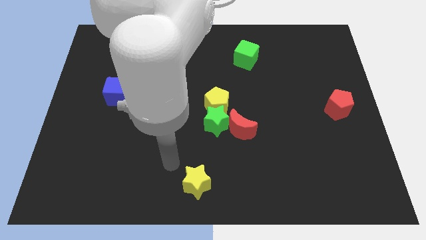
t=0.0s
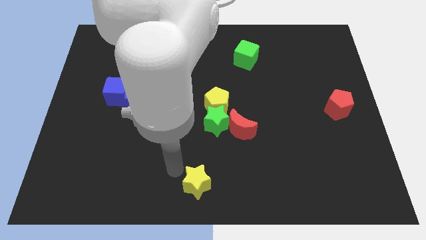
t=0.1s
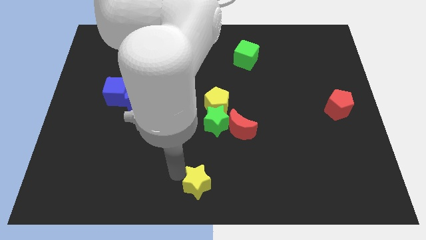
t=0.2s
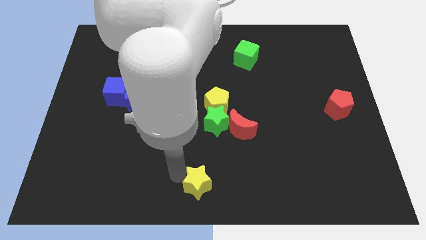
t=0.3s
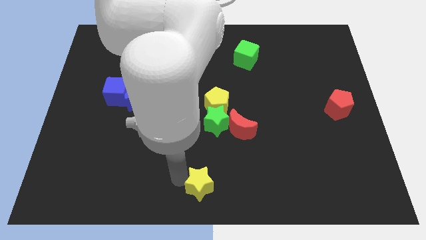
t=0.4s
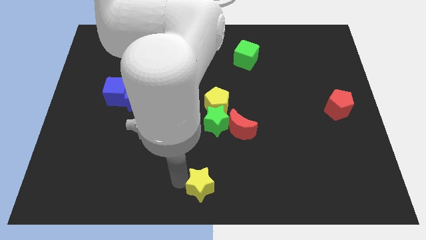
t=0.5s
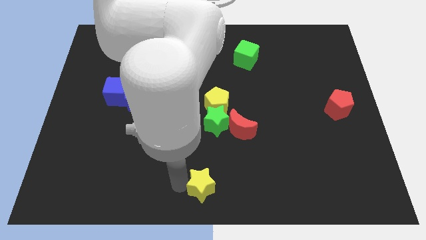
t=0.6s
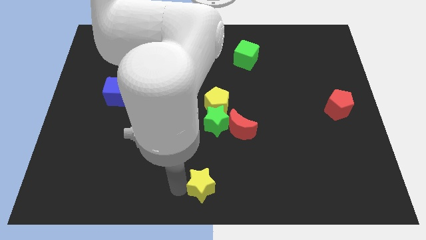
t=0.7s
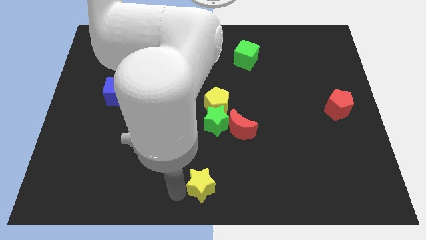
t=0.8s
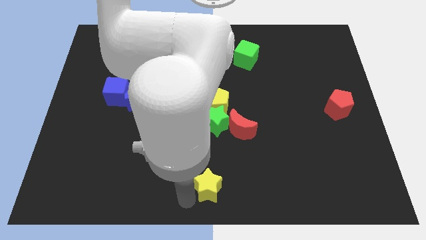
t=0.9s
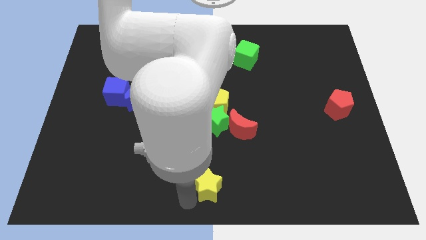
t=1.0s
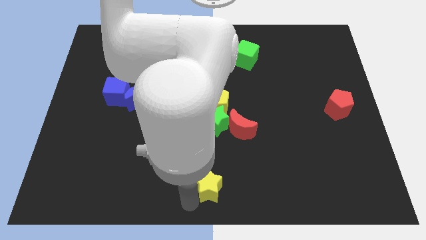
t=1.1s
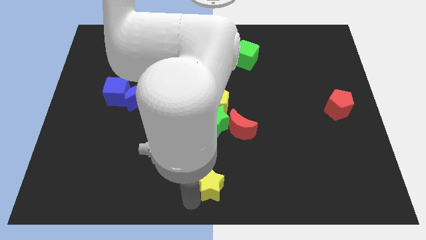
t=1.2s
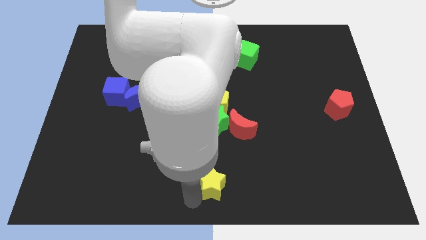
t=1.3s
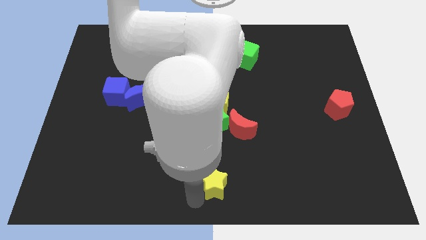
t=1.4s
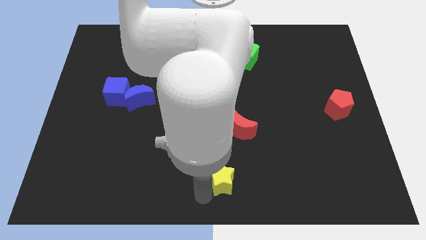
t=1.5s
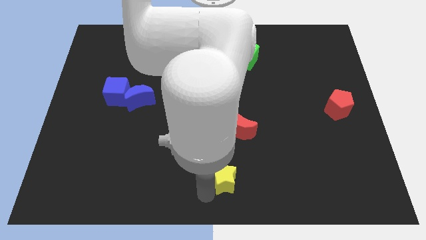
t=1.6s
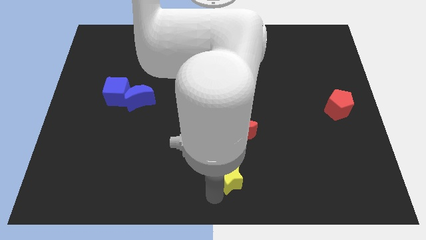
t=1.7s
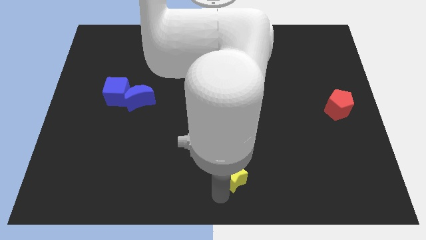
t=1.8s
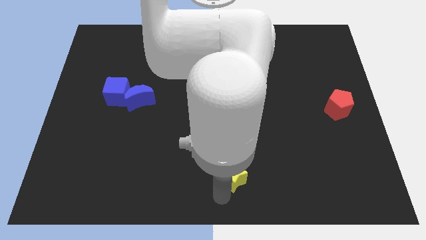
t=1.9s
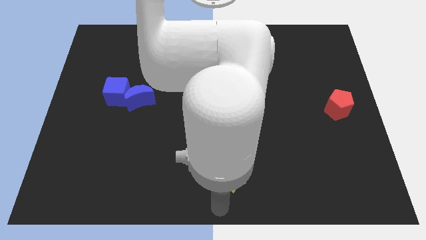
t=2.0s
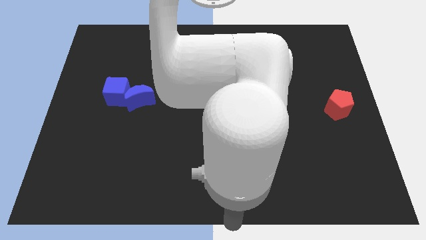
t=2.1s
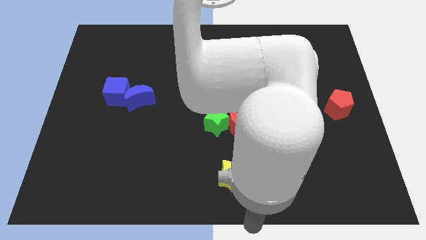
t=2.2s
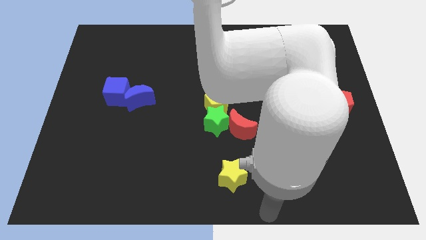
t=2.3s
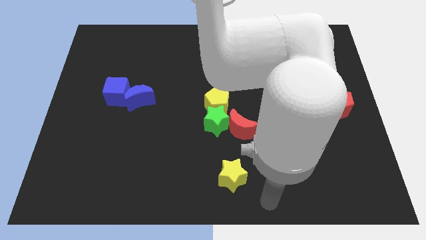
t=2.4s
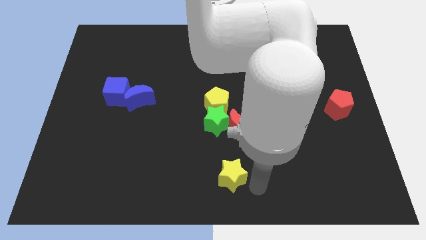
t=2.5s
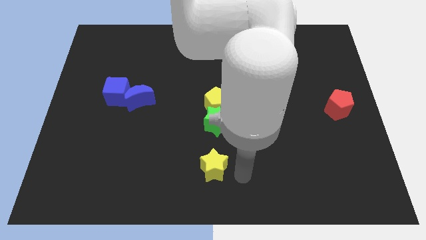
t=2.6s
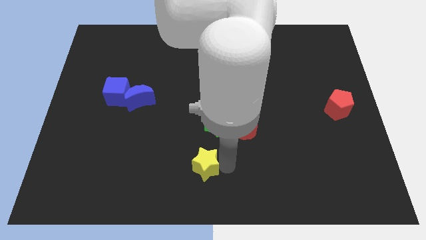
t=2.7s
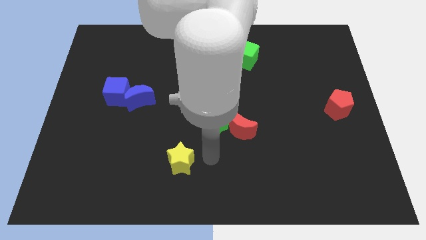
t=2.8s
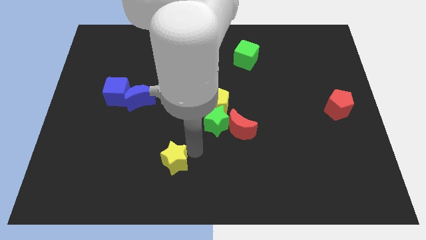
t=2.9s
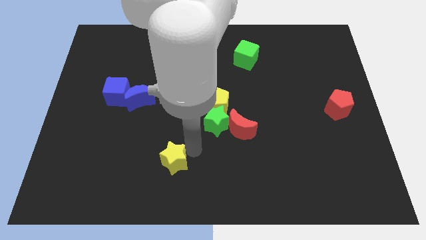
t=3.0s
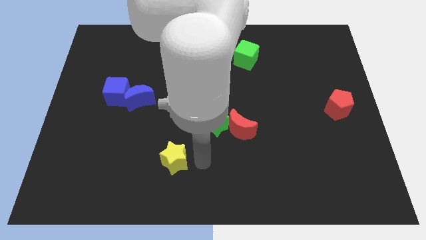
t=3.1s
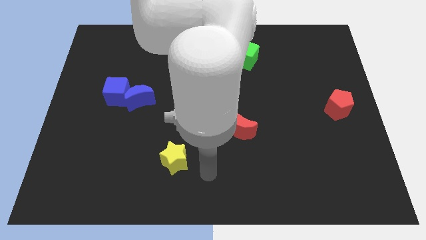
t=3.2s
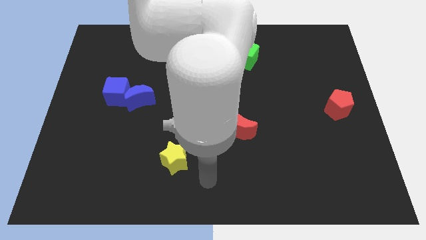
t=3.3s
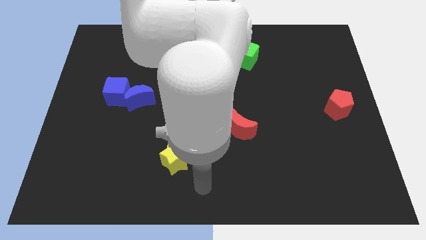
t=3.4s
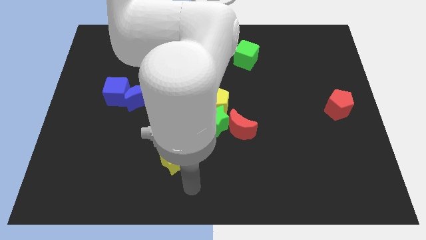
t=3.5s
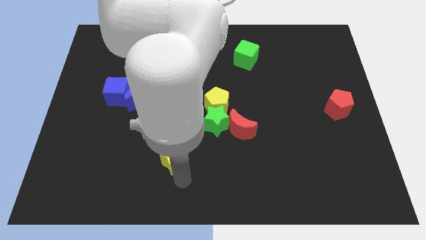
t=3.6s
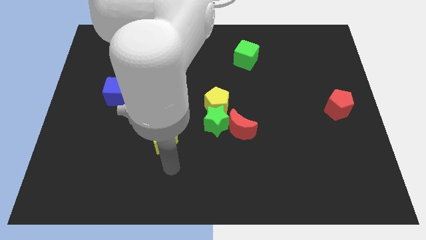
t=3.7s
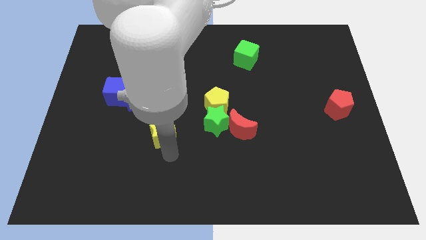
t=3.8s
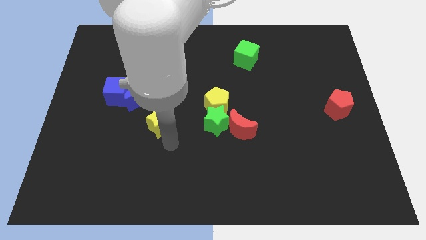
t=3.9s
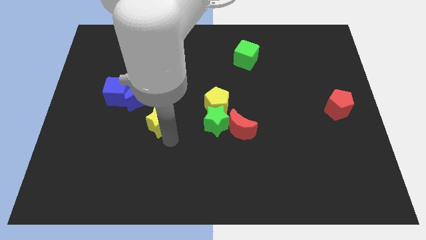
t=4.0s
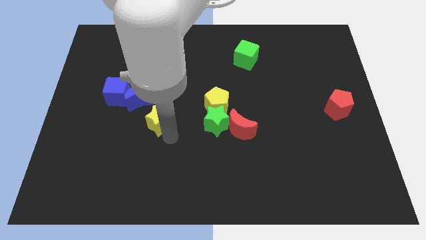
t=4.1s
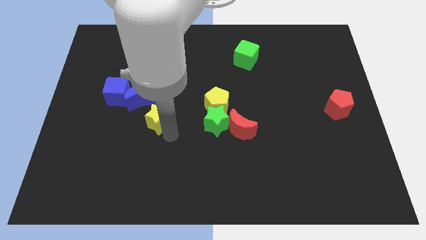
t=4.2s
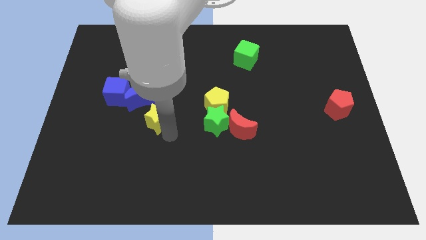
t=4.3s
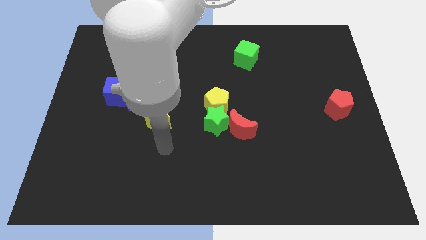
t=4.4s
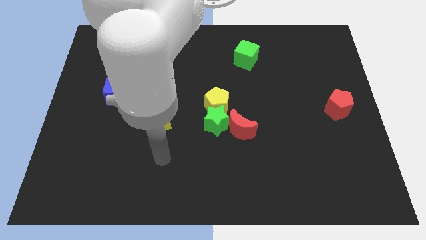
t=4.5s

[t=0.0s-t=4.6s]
push the yellow star towards the bottom of the blue crescent

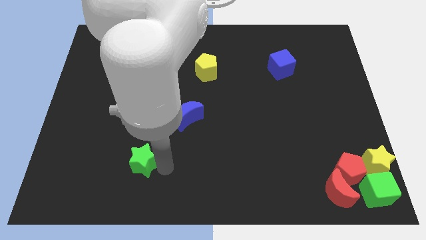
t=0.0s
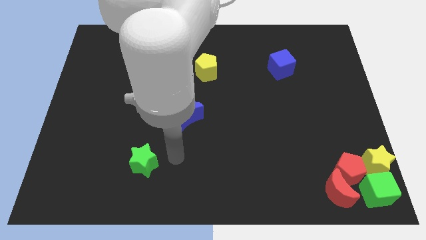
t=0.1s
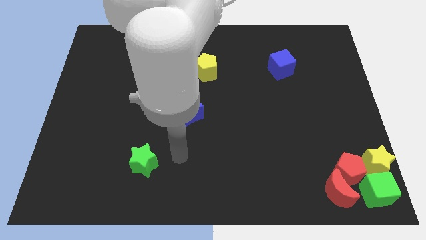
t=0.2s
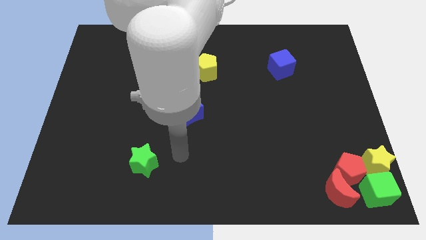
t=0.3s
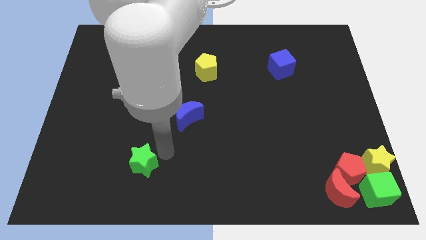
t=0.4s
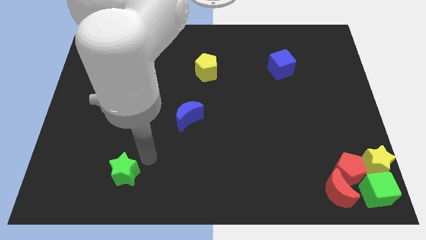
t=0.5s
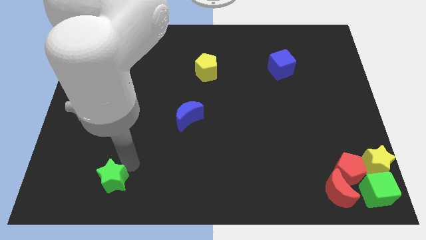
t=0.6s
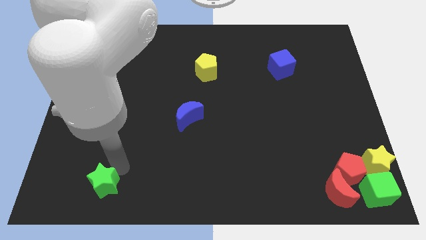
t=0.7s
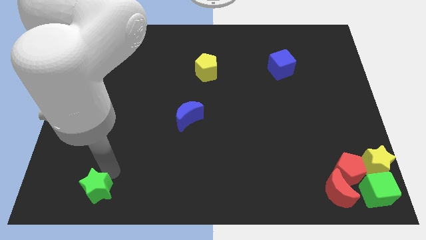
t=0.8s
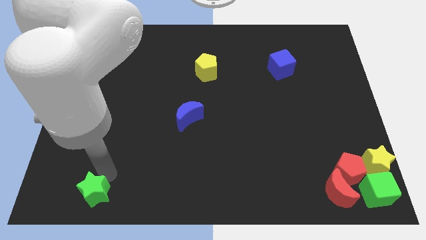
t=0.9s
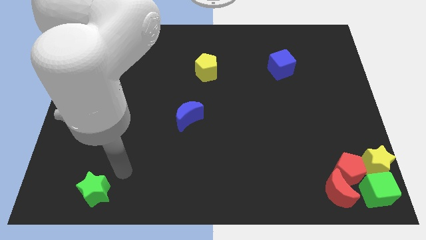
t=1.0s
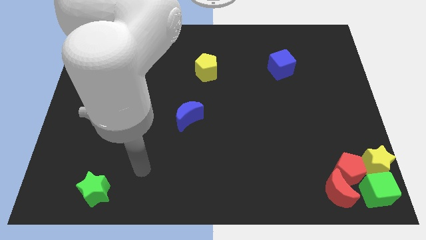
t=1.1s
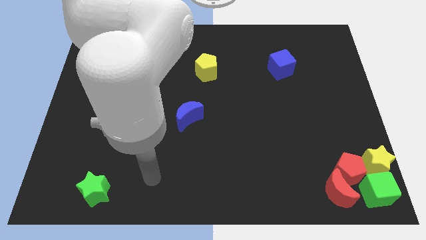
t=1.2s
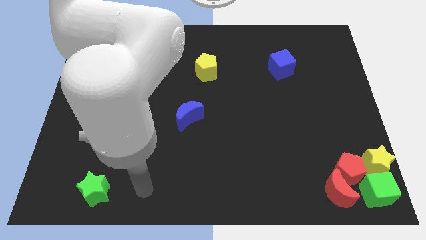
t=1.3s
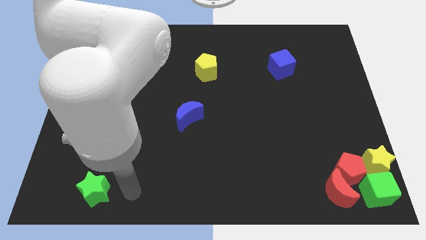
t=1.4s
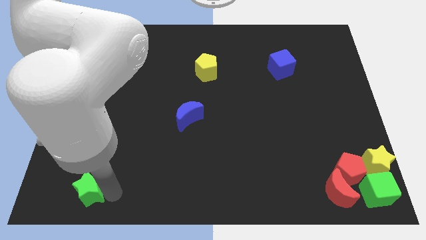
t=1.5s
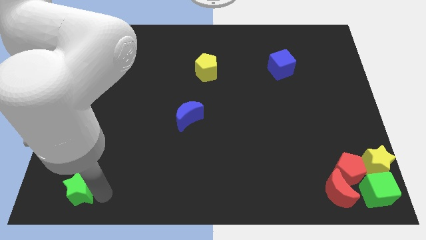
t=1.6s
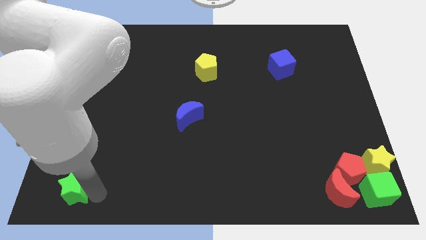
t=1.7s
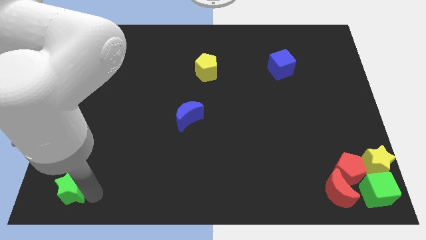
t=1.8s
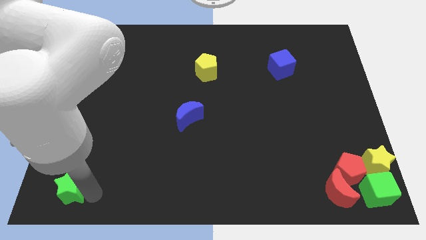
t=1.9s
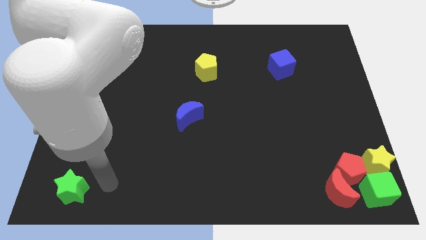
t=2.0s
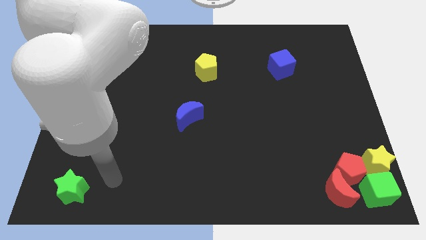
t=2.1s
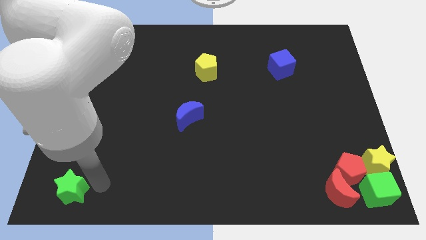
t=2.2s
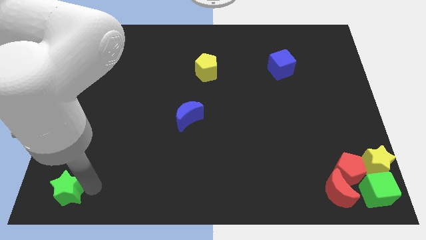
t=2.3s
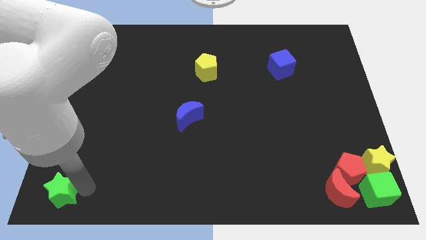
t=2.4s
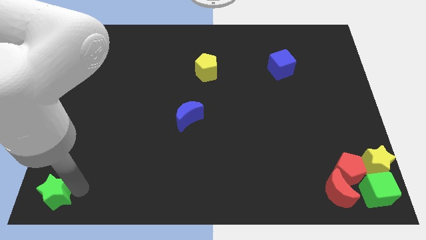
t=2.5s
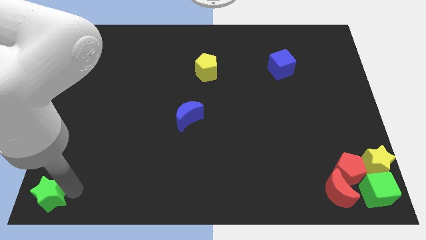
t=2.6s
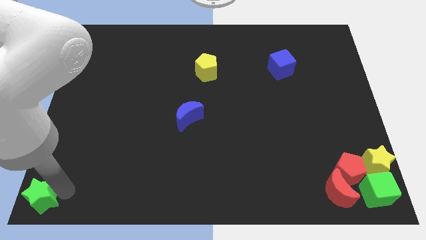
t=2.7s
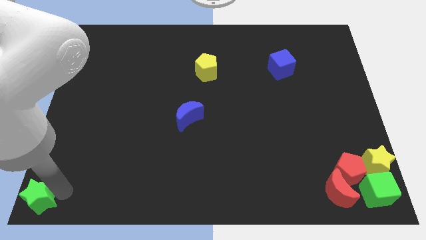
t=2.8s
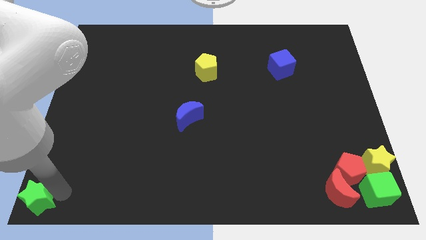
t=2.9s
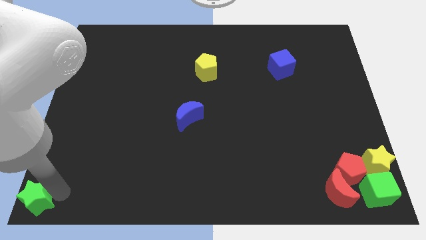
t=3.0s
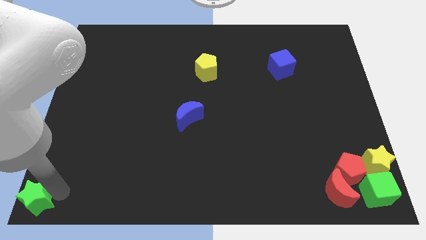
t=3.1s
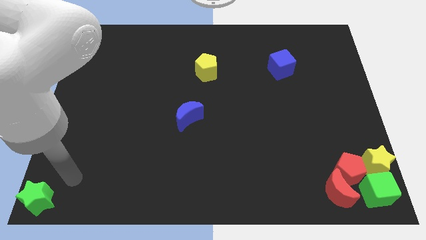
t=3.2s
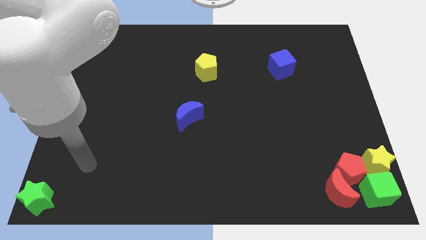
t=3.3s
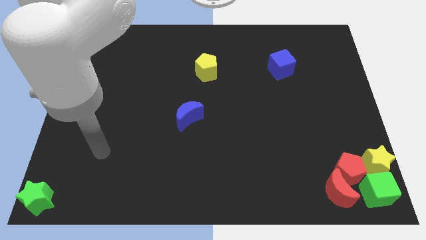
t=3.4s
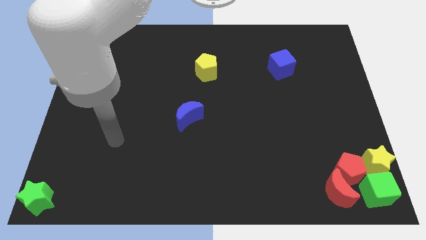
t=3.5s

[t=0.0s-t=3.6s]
push the green star to the bottom left corner of board

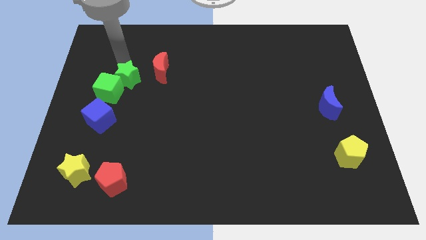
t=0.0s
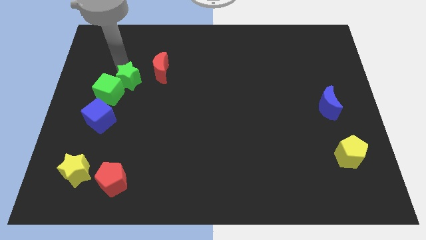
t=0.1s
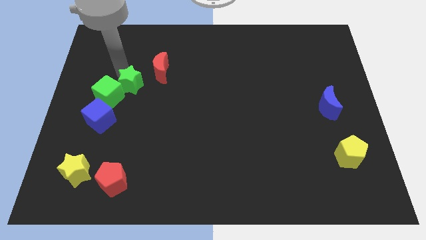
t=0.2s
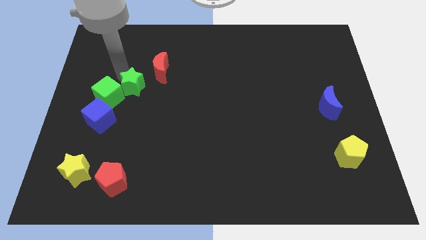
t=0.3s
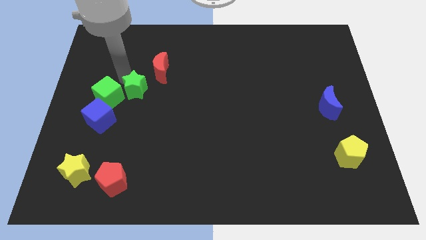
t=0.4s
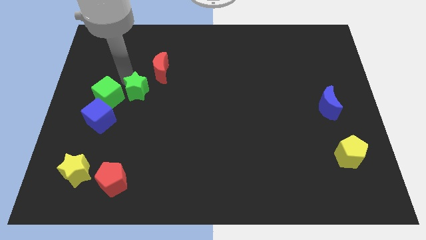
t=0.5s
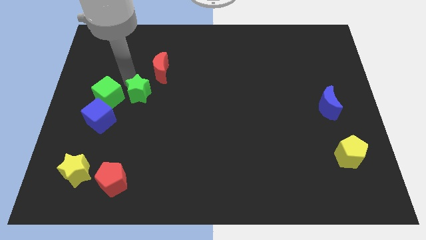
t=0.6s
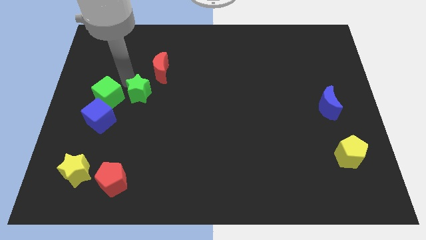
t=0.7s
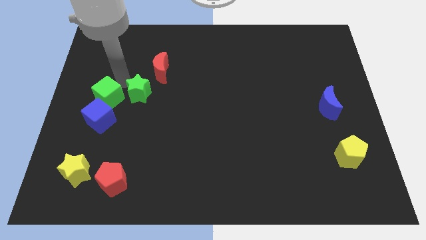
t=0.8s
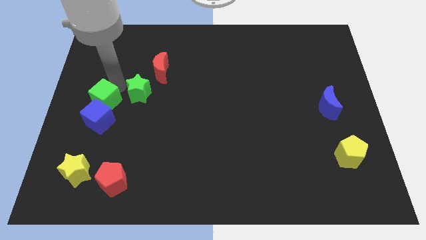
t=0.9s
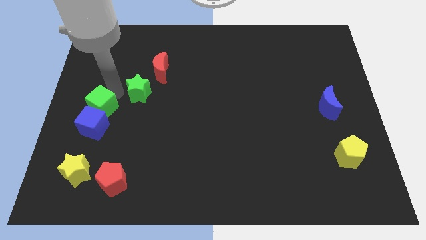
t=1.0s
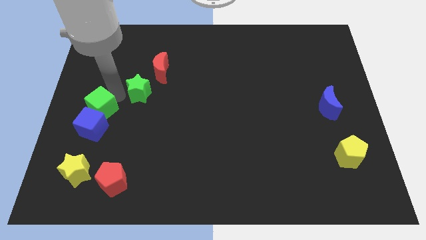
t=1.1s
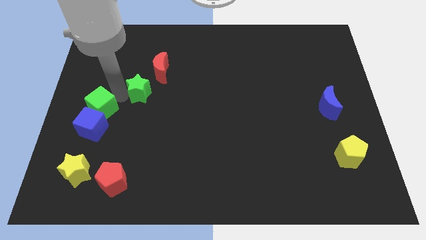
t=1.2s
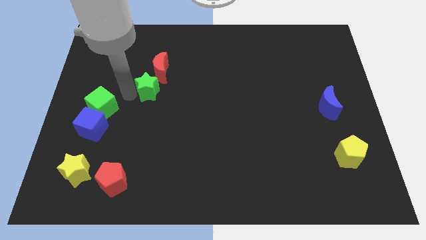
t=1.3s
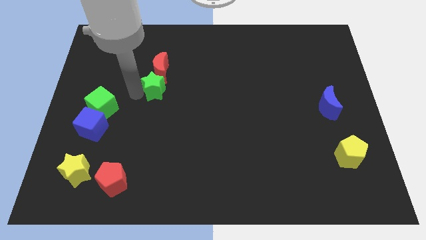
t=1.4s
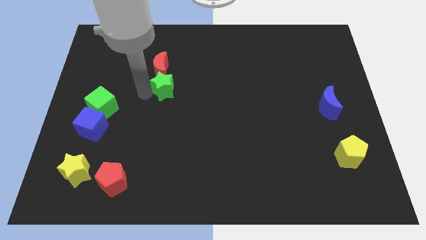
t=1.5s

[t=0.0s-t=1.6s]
move the green star to the bottom of the red crescent
